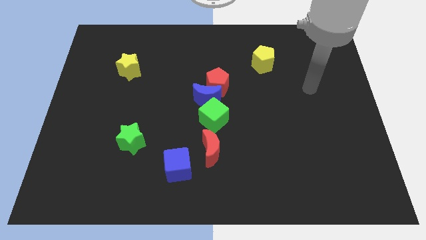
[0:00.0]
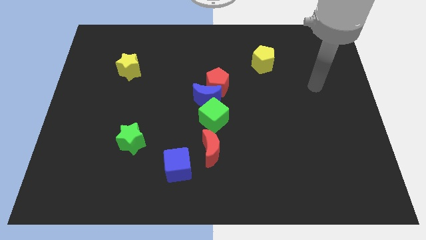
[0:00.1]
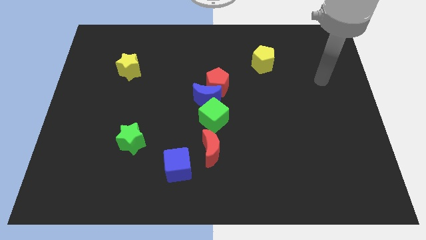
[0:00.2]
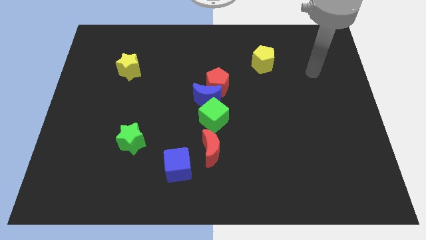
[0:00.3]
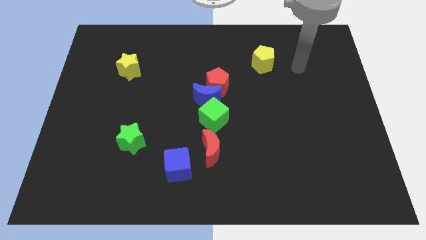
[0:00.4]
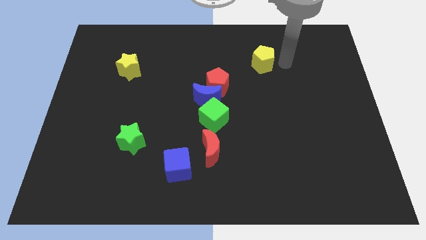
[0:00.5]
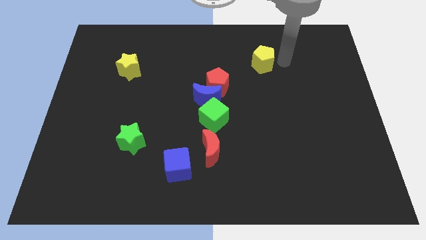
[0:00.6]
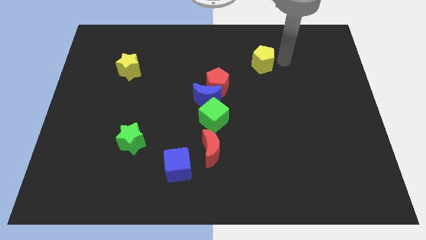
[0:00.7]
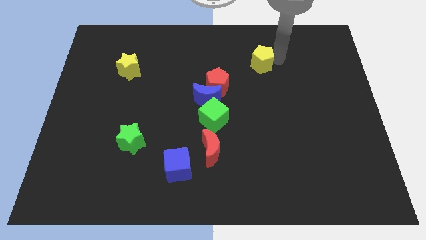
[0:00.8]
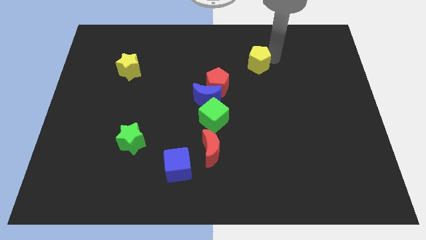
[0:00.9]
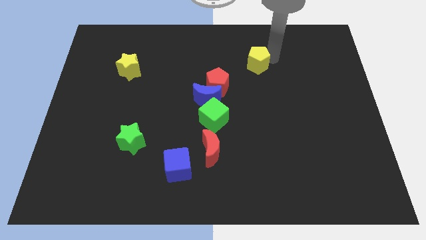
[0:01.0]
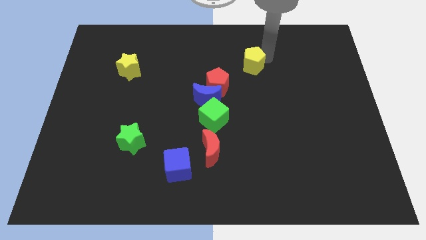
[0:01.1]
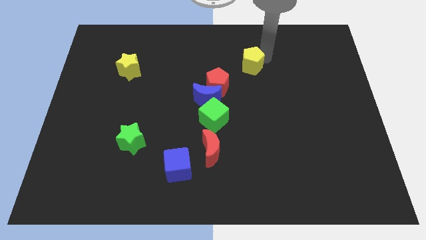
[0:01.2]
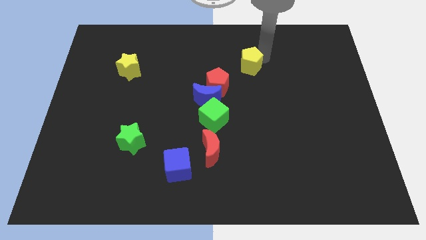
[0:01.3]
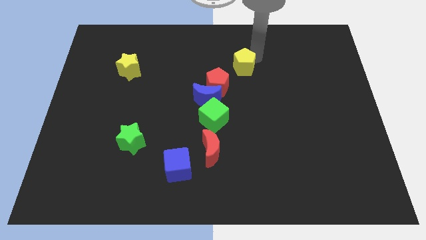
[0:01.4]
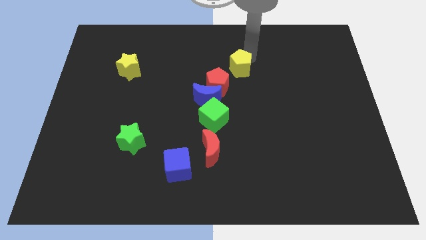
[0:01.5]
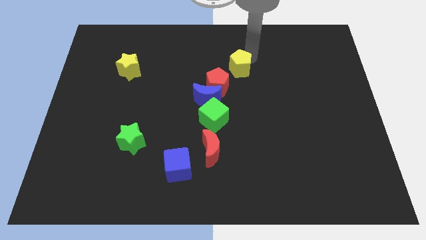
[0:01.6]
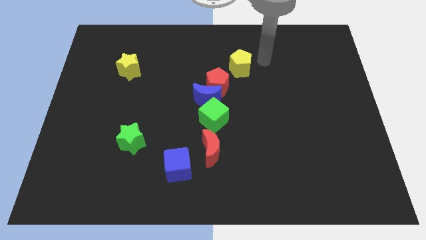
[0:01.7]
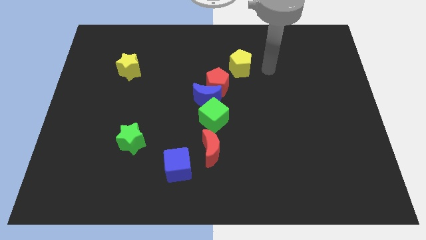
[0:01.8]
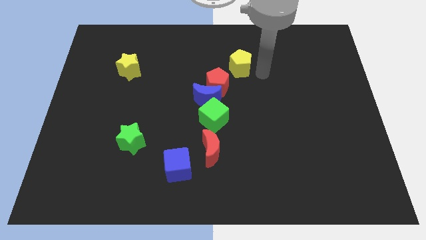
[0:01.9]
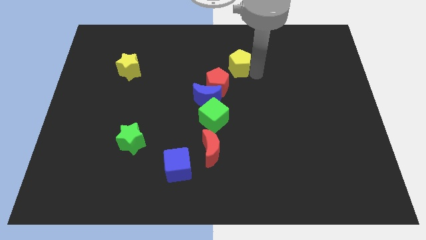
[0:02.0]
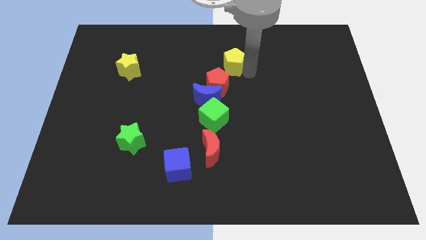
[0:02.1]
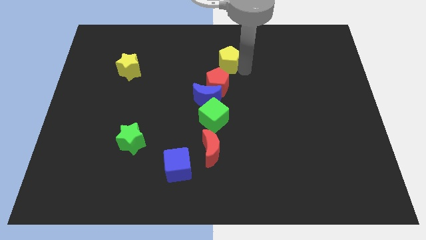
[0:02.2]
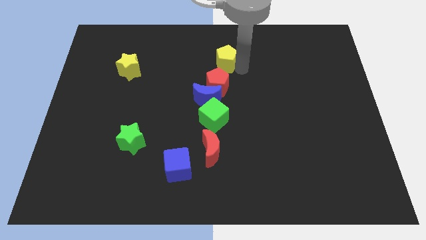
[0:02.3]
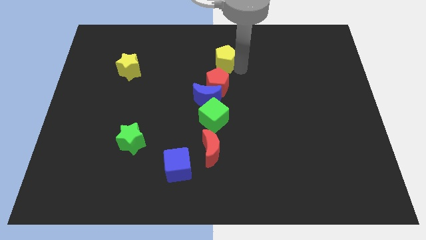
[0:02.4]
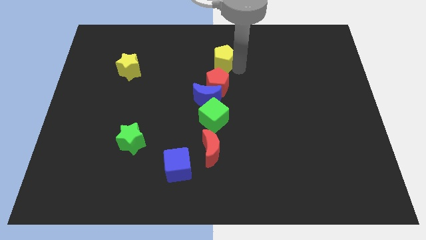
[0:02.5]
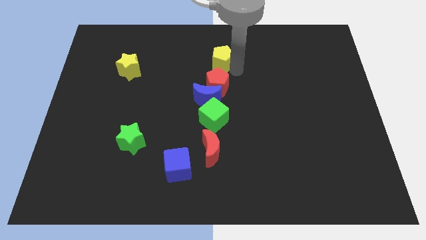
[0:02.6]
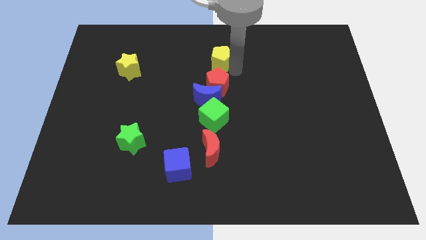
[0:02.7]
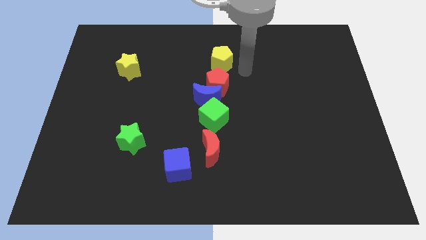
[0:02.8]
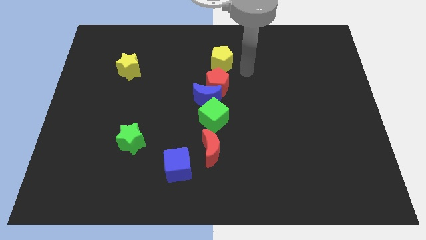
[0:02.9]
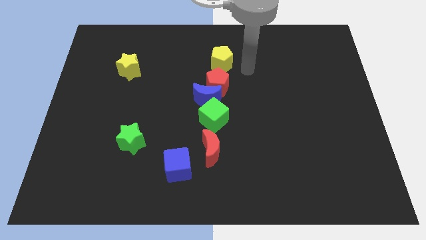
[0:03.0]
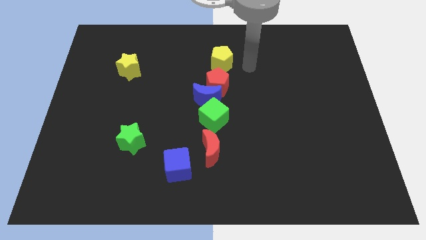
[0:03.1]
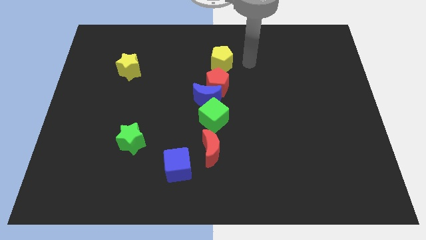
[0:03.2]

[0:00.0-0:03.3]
place yellow pentagon at the top of red pentagon

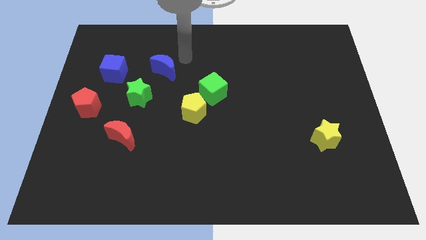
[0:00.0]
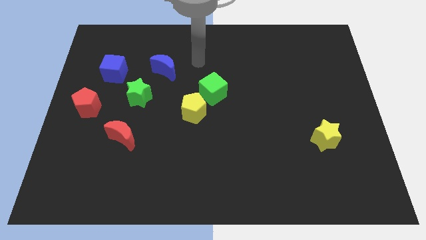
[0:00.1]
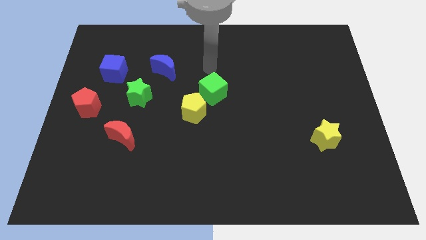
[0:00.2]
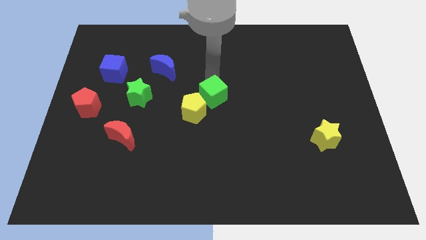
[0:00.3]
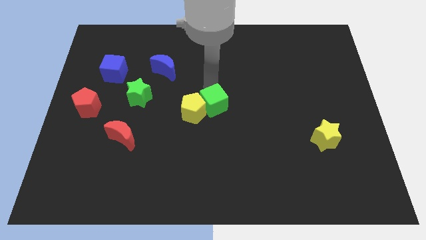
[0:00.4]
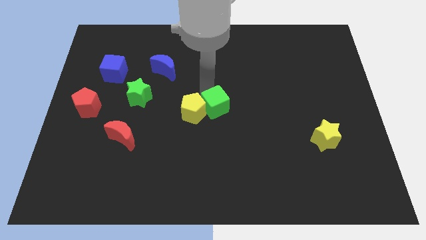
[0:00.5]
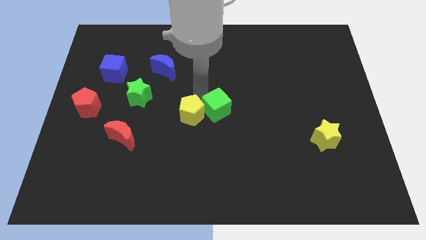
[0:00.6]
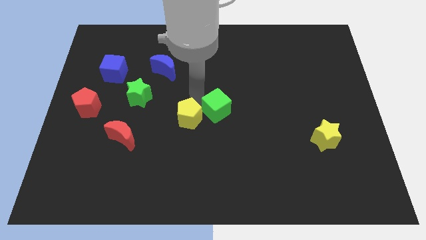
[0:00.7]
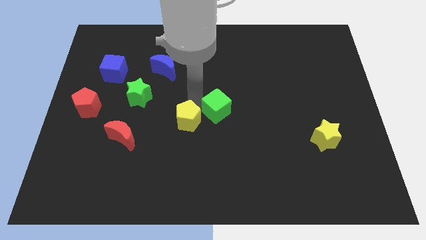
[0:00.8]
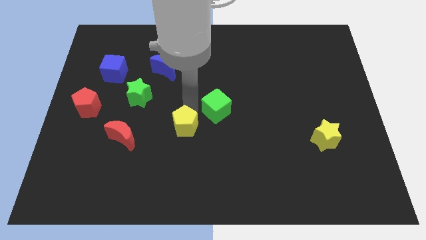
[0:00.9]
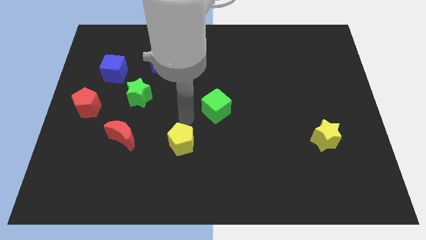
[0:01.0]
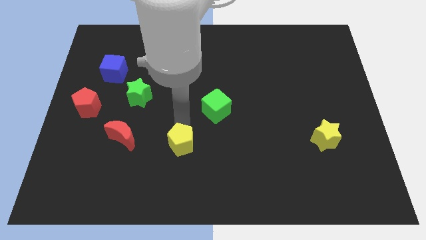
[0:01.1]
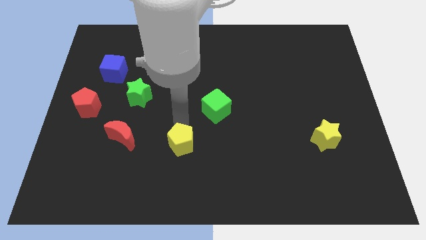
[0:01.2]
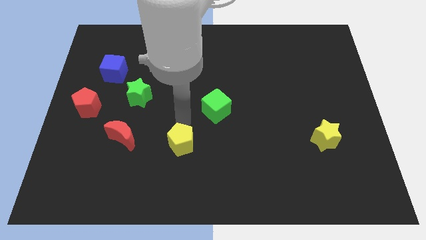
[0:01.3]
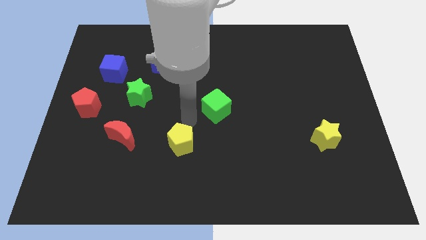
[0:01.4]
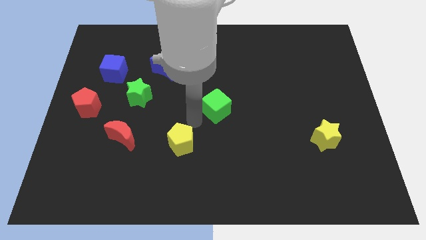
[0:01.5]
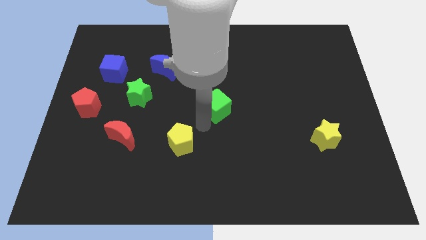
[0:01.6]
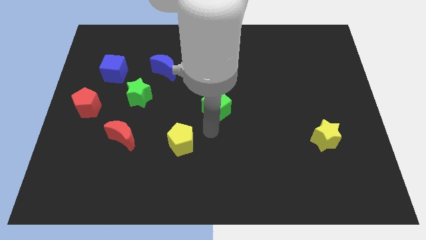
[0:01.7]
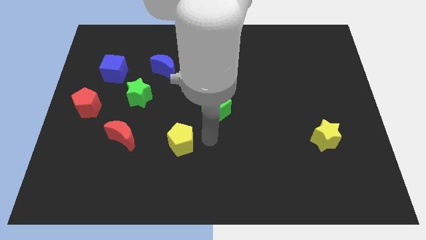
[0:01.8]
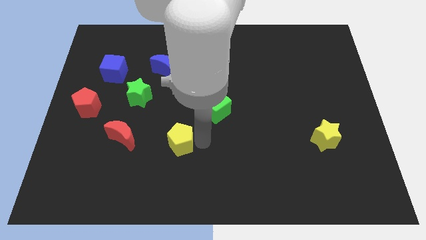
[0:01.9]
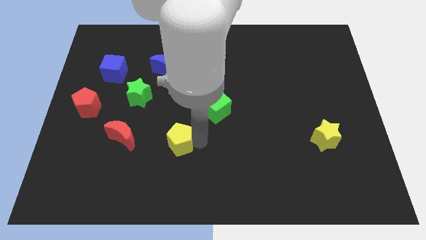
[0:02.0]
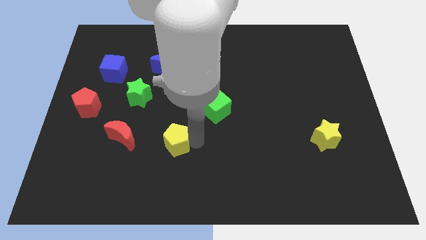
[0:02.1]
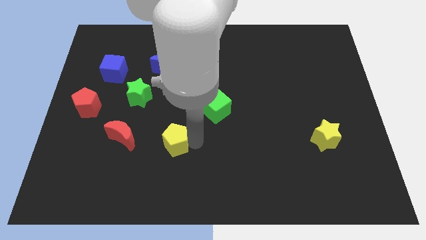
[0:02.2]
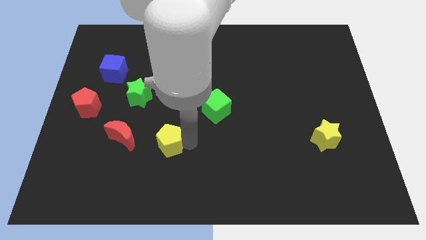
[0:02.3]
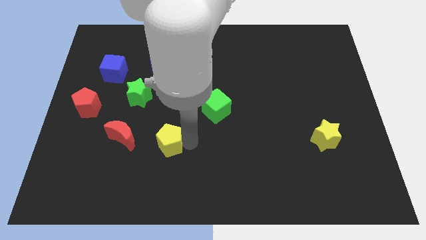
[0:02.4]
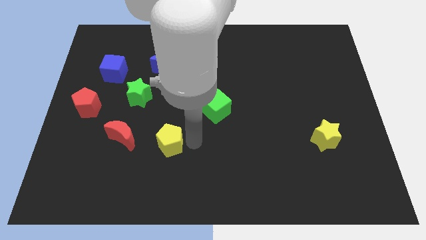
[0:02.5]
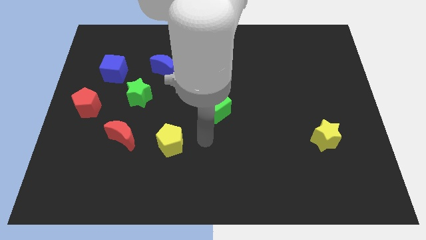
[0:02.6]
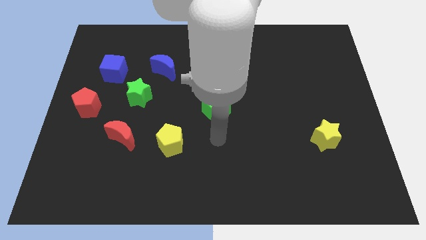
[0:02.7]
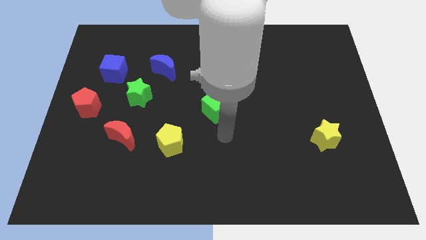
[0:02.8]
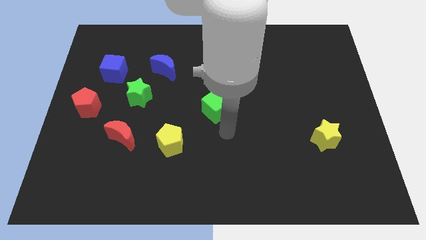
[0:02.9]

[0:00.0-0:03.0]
separate the green cube and the yellow pentagon

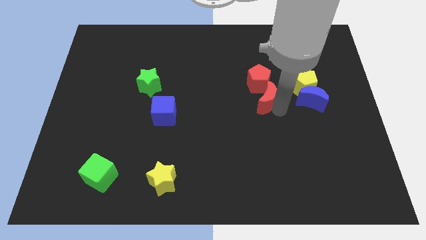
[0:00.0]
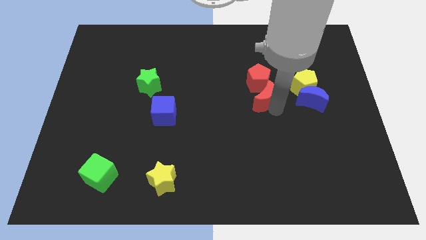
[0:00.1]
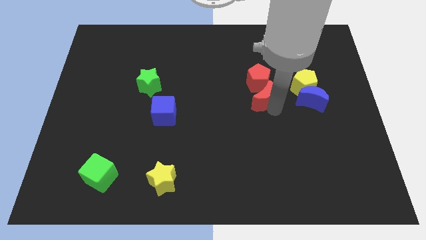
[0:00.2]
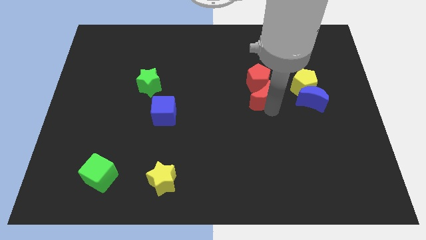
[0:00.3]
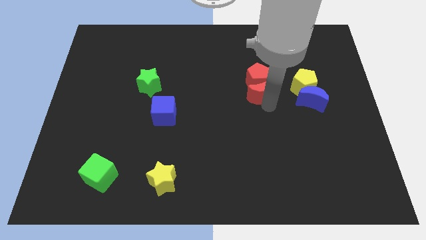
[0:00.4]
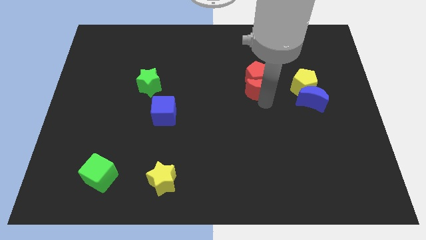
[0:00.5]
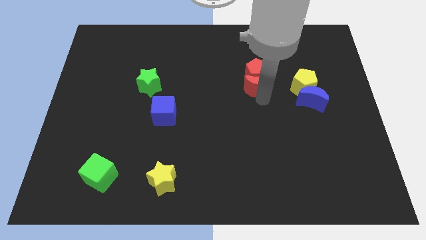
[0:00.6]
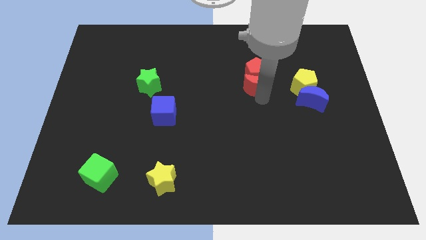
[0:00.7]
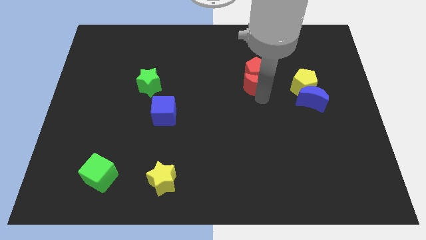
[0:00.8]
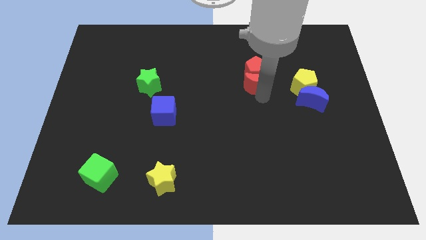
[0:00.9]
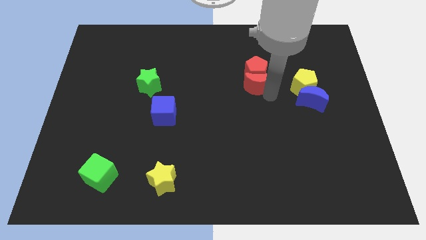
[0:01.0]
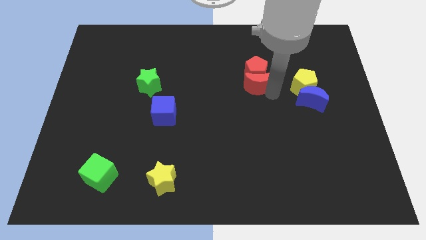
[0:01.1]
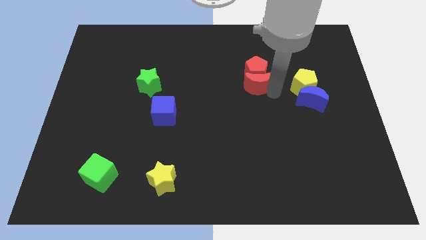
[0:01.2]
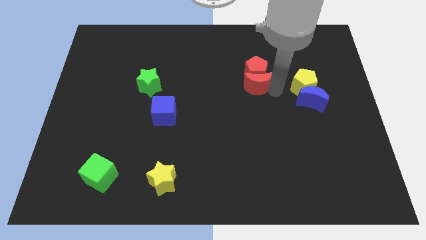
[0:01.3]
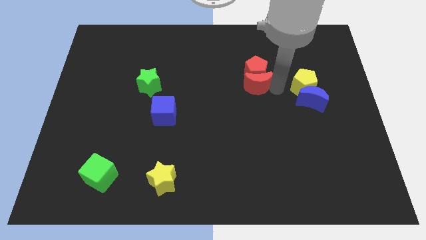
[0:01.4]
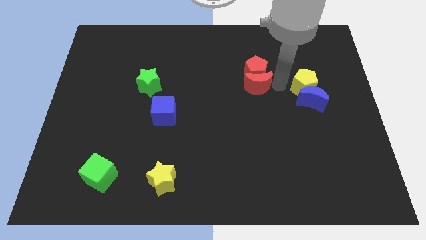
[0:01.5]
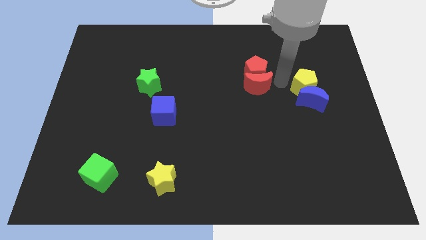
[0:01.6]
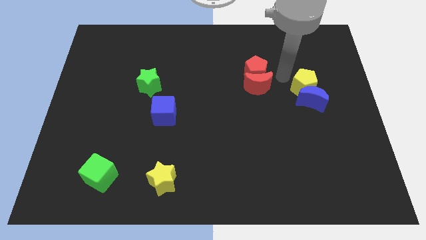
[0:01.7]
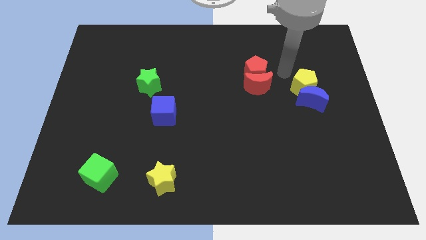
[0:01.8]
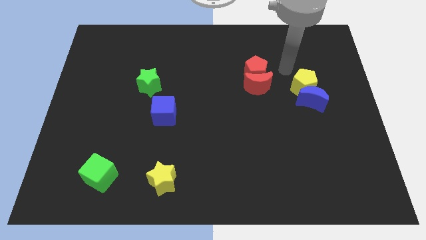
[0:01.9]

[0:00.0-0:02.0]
push the red moon into the red pentagon

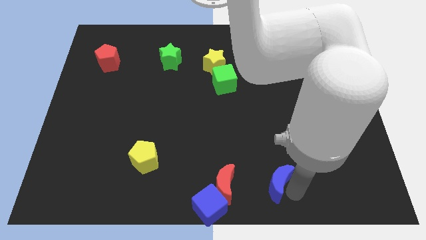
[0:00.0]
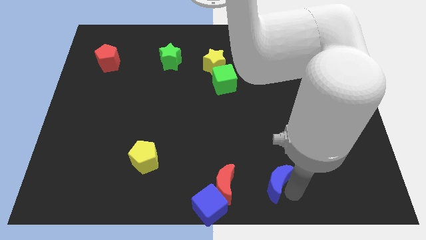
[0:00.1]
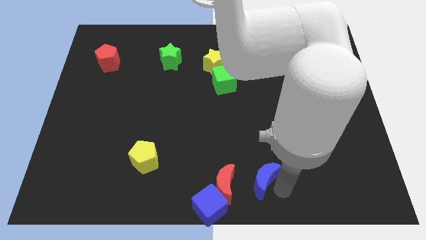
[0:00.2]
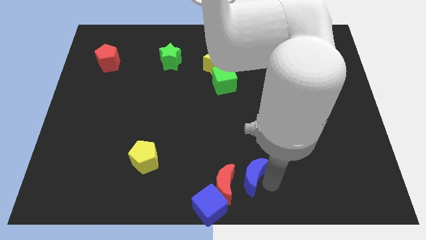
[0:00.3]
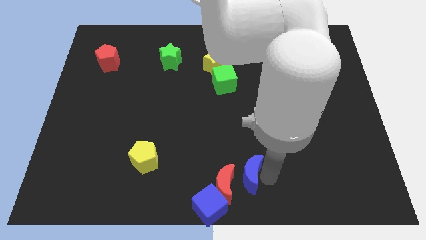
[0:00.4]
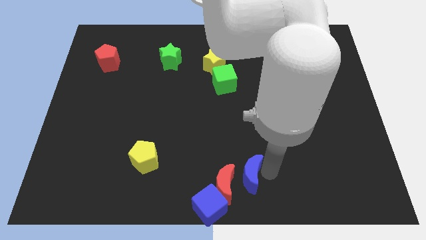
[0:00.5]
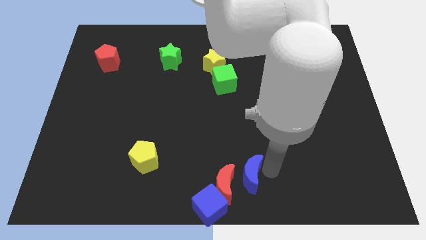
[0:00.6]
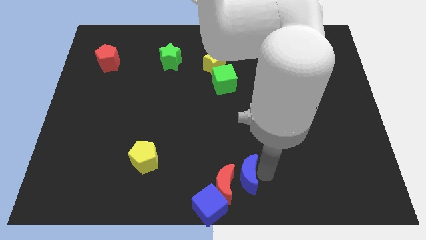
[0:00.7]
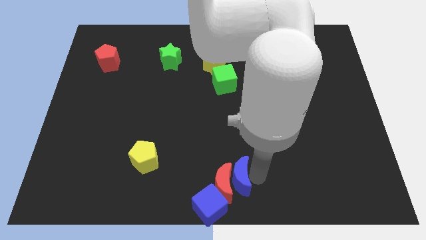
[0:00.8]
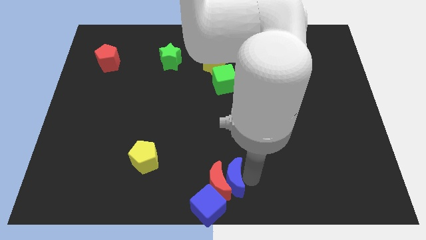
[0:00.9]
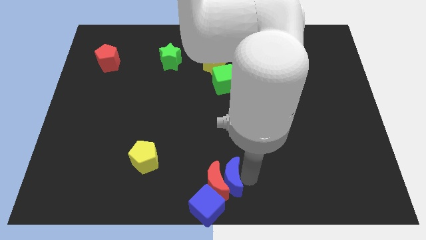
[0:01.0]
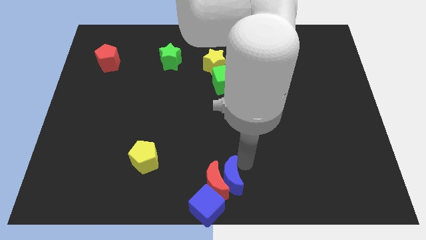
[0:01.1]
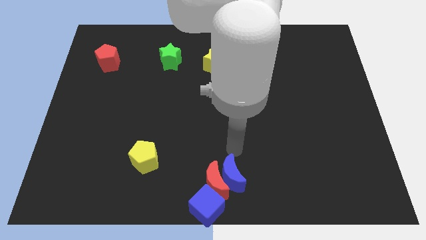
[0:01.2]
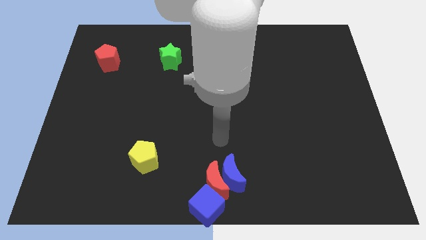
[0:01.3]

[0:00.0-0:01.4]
push the blue moon into red crescent diagonally
